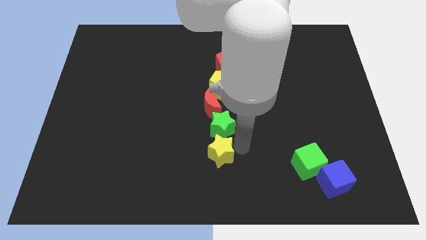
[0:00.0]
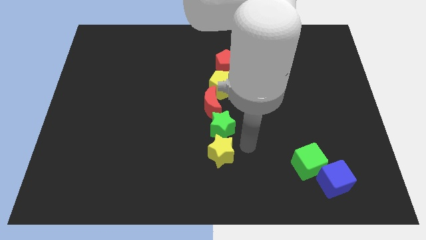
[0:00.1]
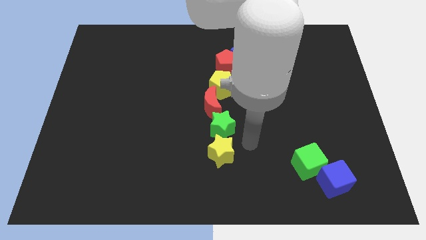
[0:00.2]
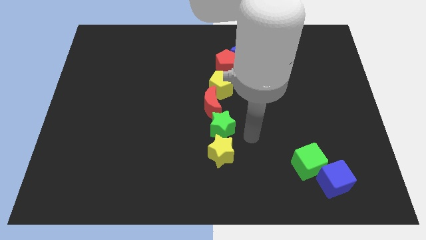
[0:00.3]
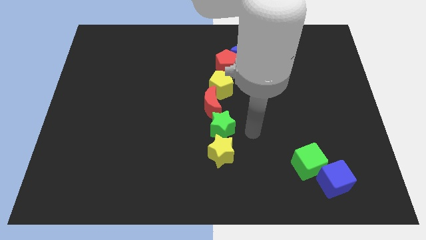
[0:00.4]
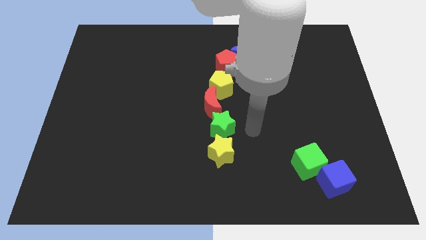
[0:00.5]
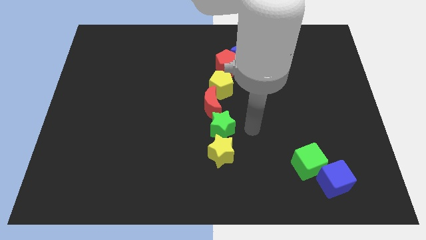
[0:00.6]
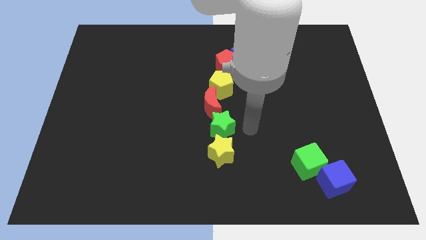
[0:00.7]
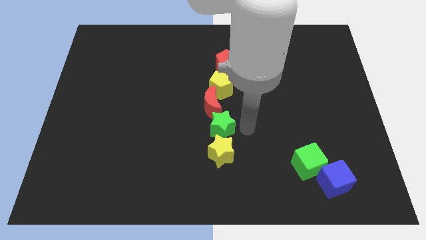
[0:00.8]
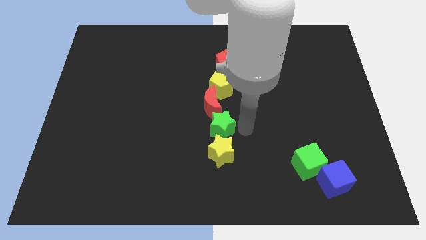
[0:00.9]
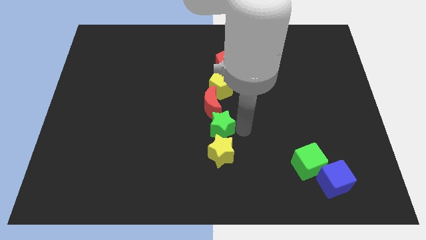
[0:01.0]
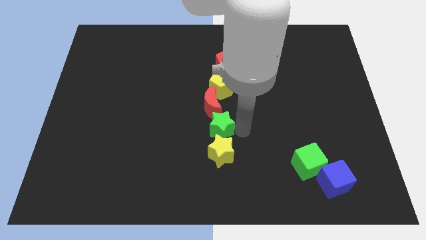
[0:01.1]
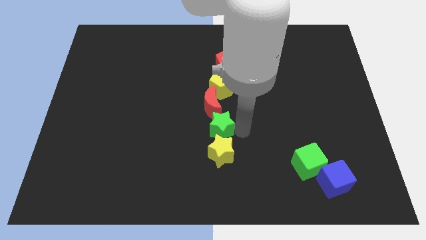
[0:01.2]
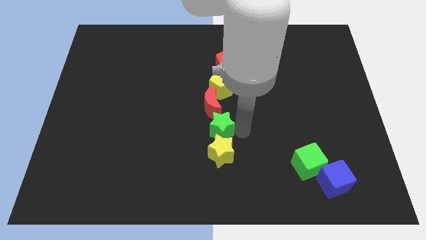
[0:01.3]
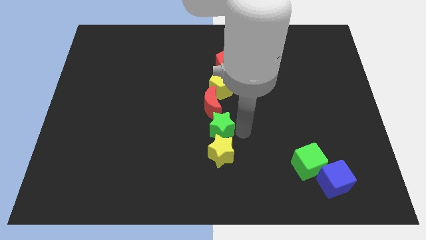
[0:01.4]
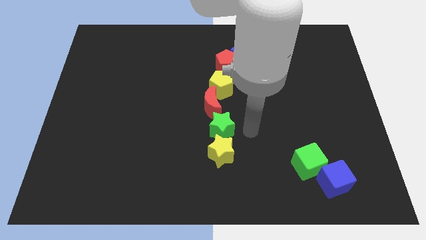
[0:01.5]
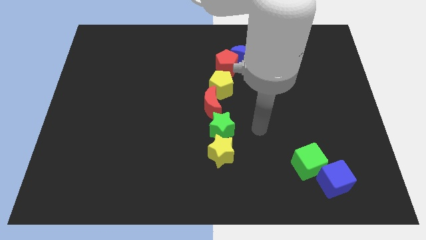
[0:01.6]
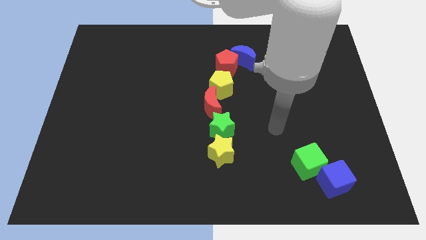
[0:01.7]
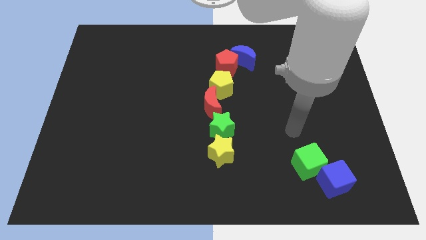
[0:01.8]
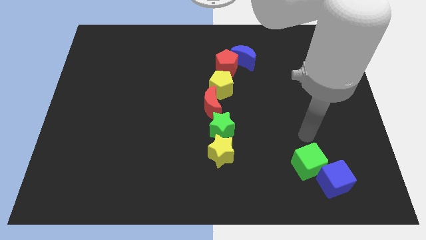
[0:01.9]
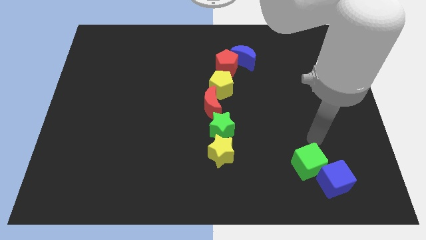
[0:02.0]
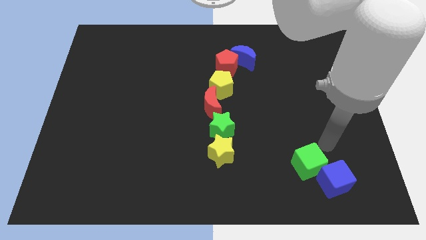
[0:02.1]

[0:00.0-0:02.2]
adjust the green star at the top of yellow star

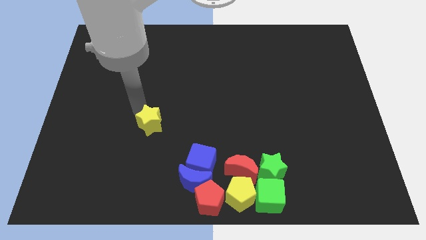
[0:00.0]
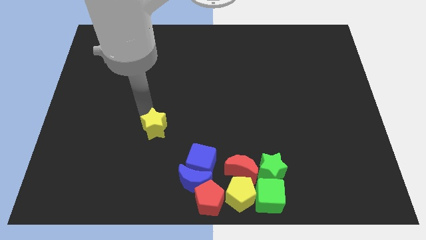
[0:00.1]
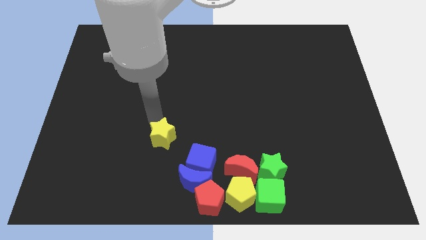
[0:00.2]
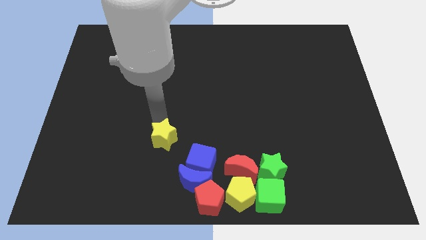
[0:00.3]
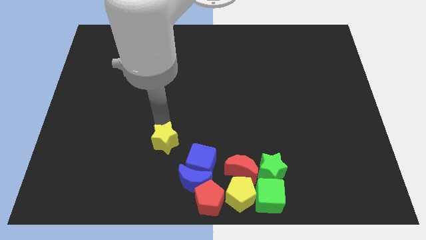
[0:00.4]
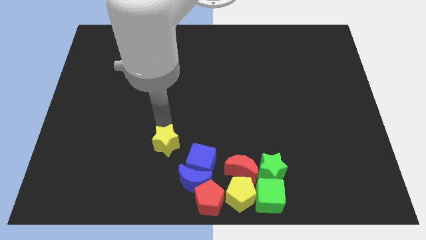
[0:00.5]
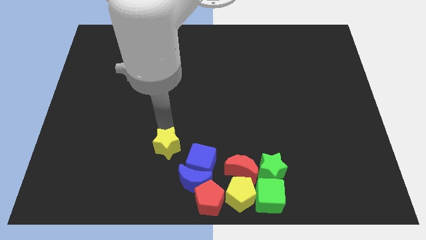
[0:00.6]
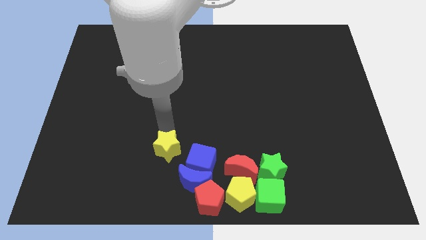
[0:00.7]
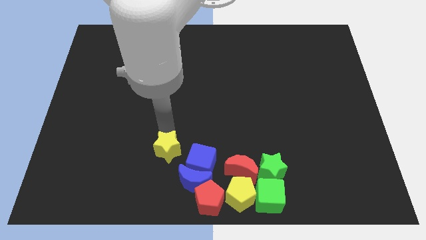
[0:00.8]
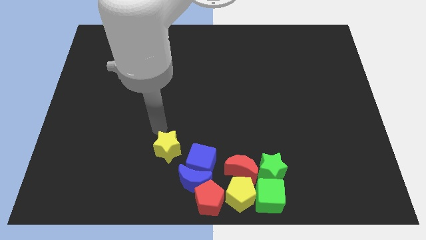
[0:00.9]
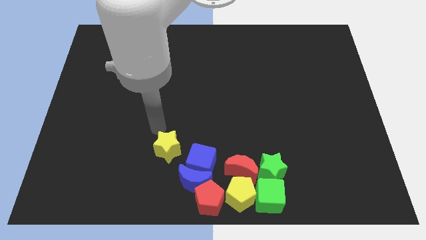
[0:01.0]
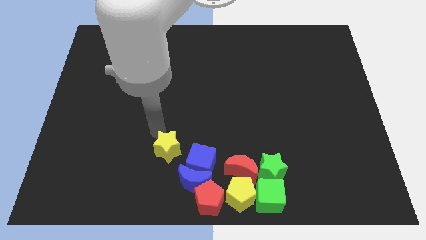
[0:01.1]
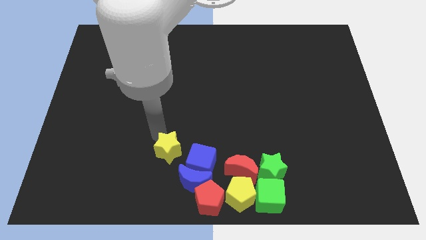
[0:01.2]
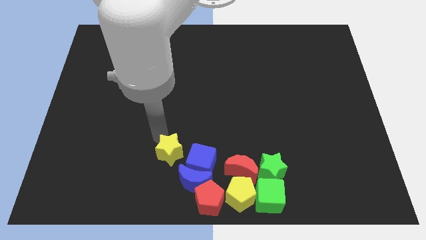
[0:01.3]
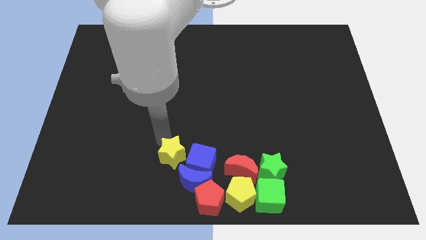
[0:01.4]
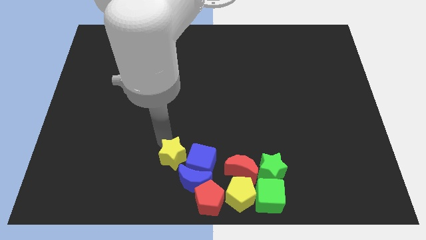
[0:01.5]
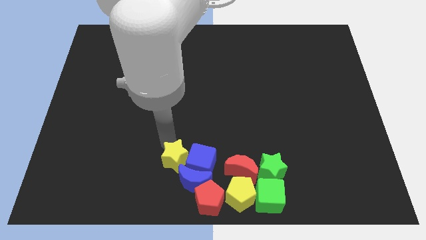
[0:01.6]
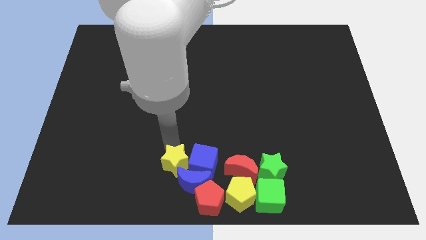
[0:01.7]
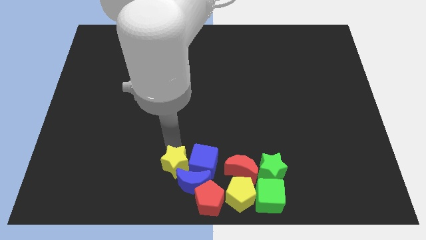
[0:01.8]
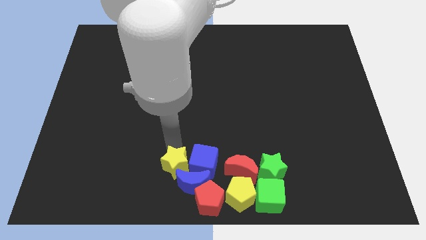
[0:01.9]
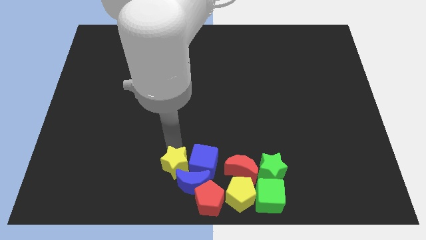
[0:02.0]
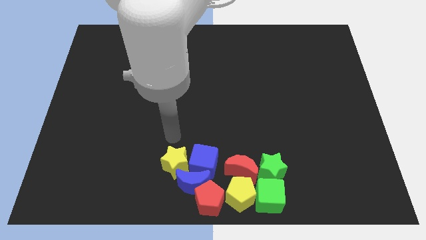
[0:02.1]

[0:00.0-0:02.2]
place the yellow star into the blue blocks

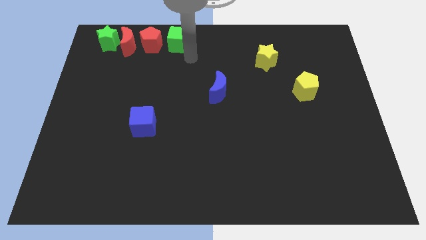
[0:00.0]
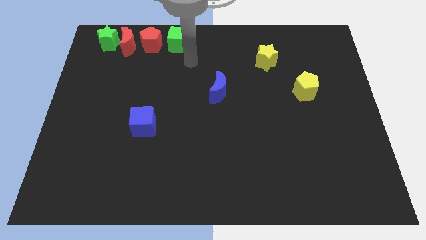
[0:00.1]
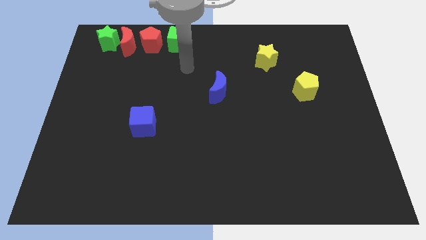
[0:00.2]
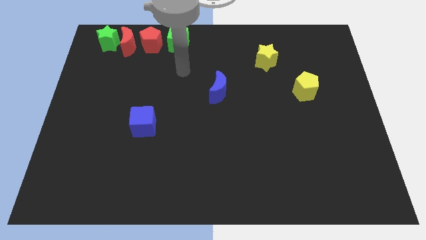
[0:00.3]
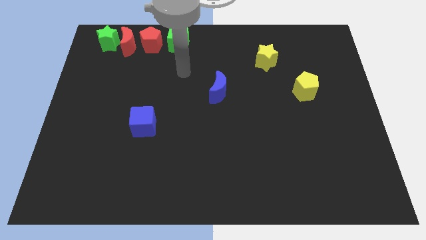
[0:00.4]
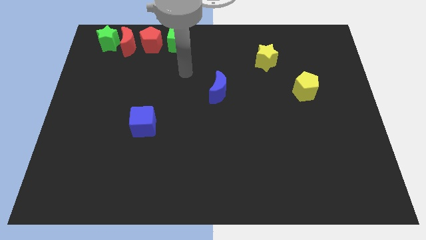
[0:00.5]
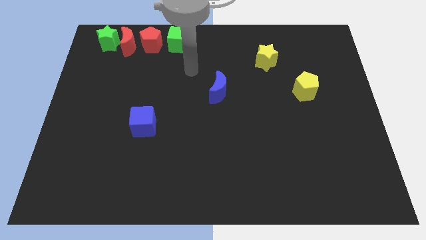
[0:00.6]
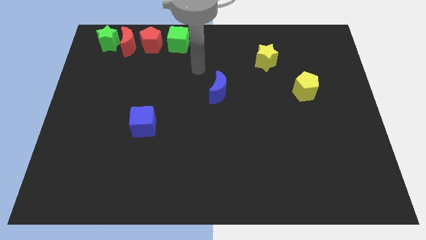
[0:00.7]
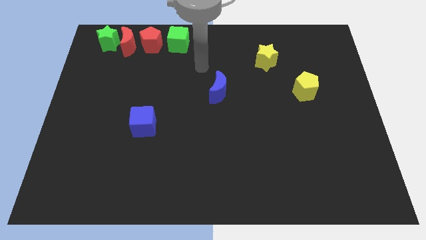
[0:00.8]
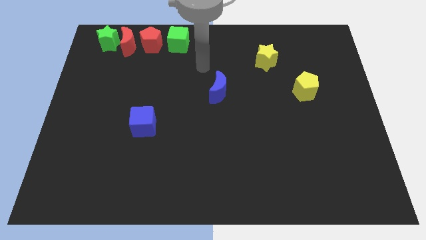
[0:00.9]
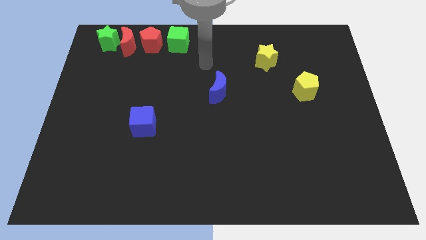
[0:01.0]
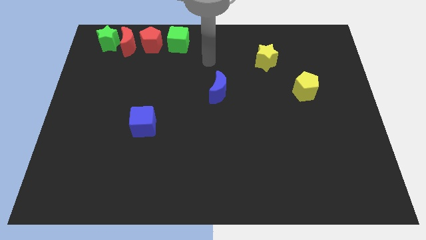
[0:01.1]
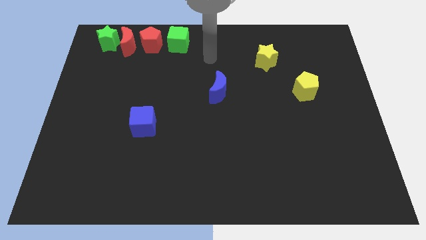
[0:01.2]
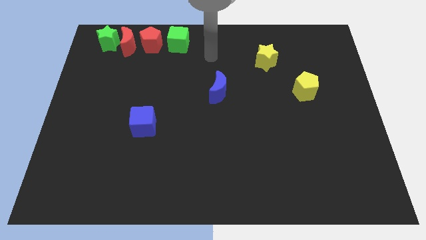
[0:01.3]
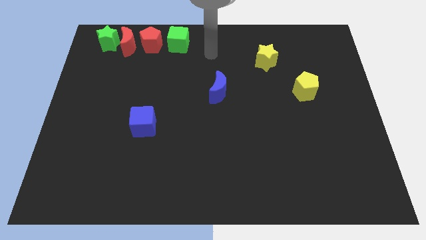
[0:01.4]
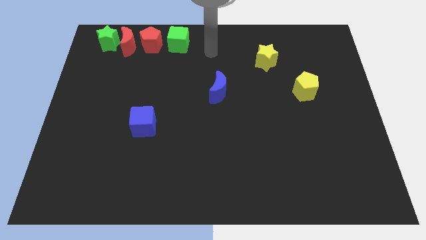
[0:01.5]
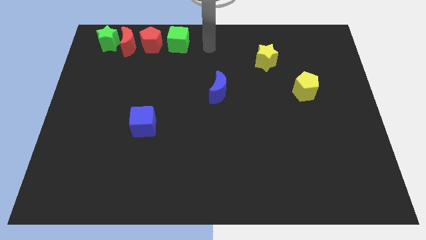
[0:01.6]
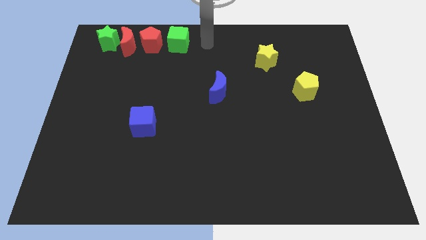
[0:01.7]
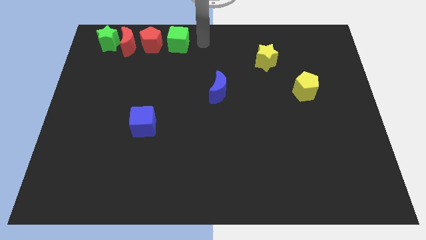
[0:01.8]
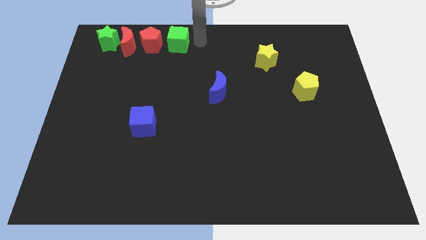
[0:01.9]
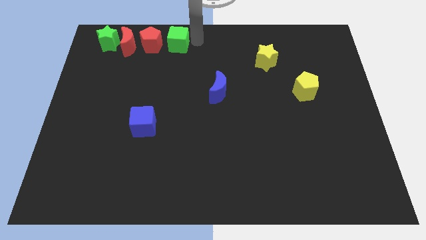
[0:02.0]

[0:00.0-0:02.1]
move your arm to the right side of the green cube

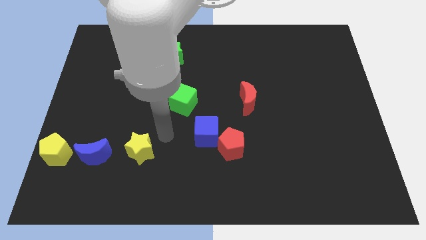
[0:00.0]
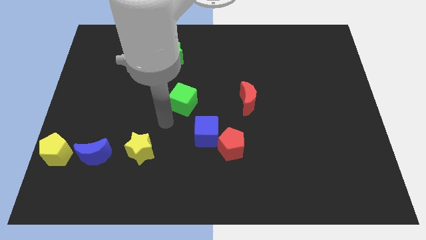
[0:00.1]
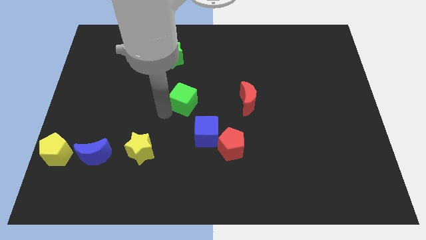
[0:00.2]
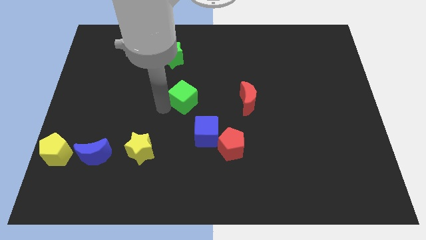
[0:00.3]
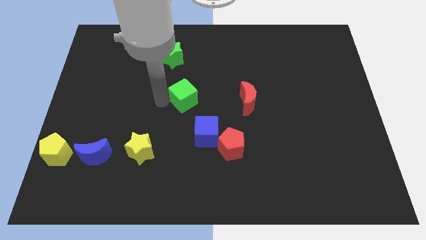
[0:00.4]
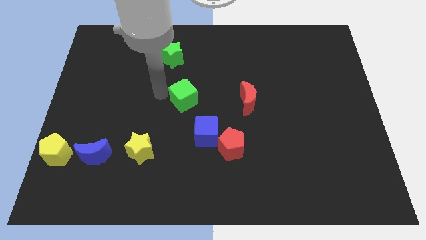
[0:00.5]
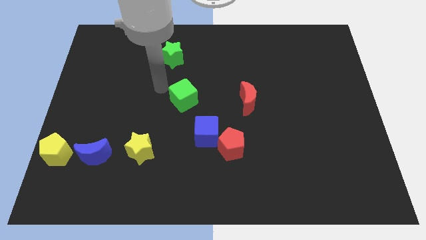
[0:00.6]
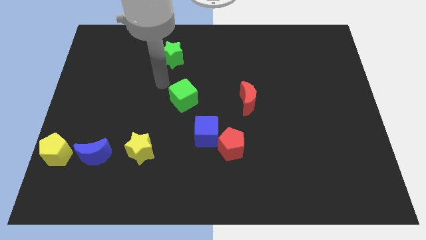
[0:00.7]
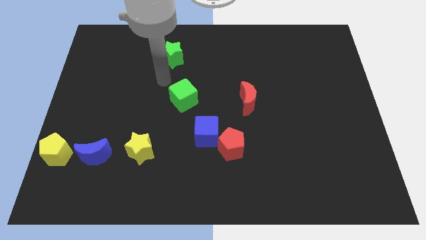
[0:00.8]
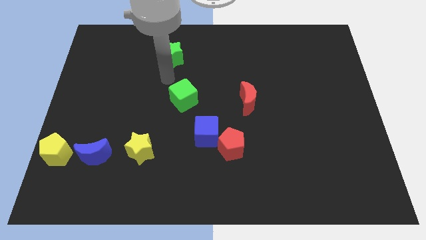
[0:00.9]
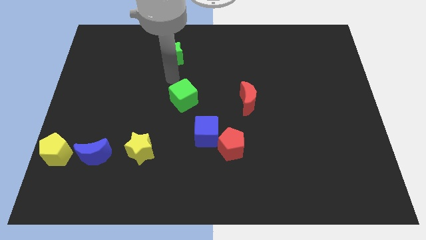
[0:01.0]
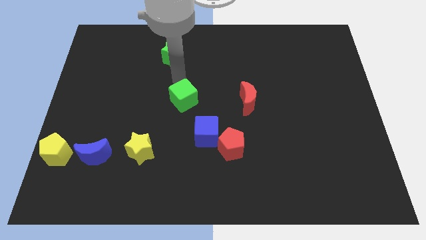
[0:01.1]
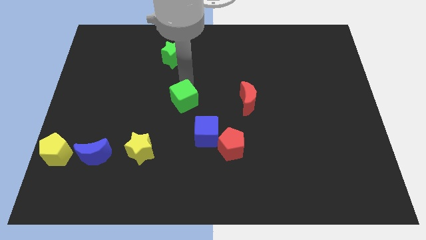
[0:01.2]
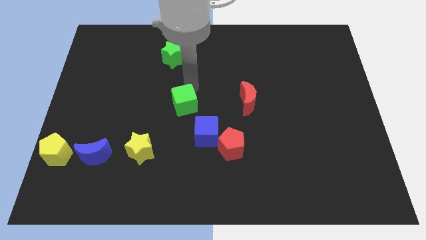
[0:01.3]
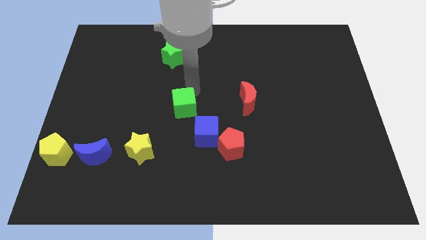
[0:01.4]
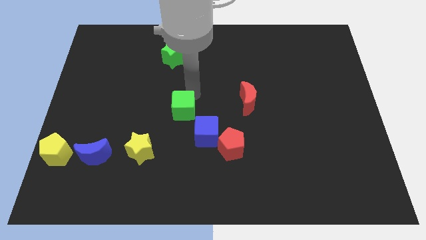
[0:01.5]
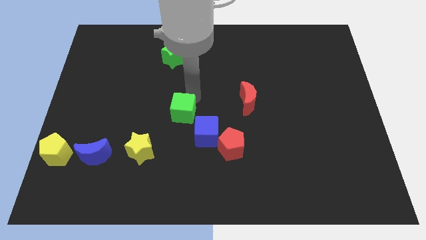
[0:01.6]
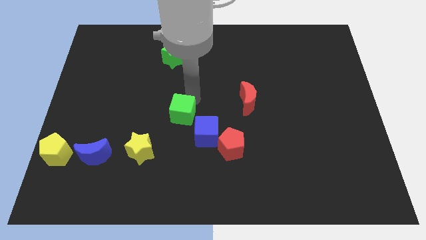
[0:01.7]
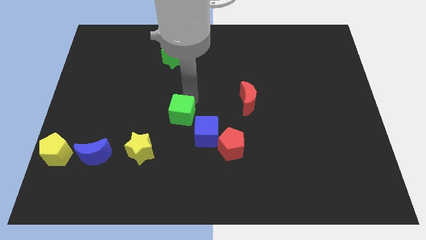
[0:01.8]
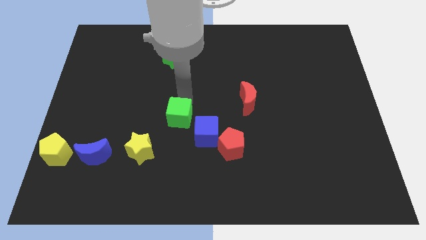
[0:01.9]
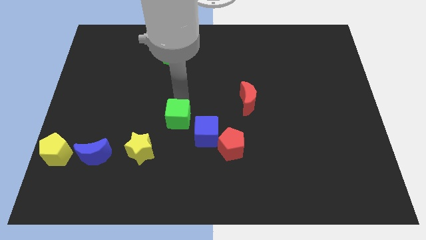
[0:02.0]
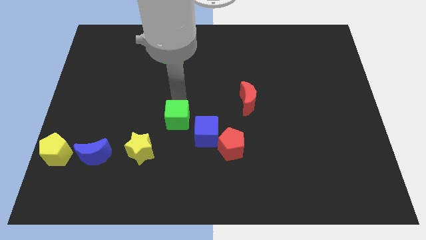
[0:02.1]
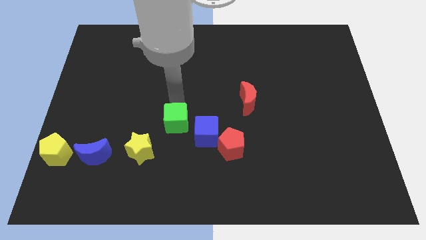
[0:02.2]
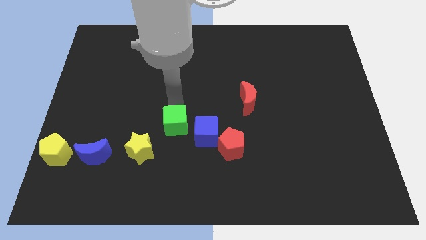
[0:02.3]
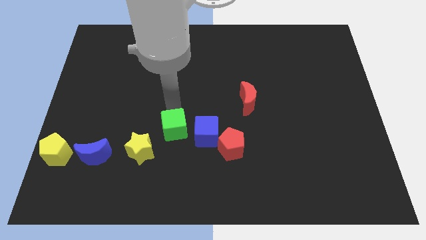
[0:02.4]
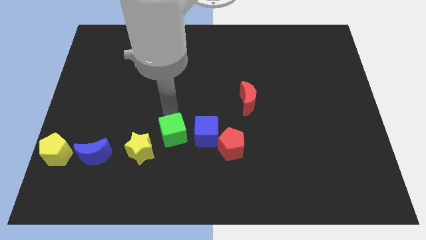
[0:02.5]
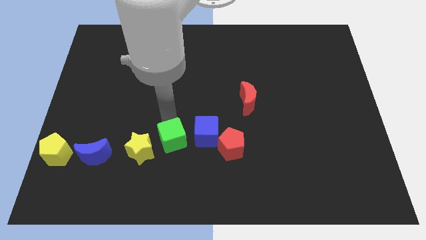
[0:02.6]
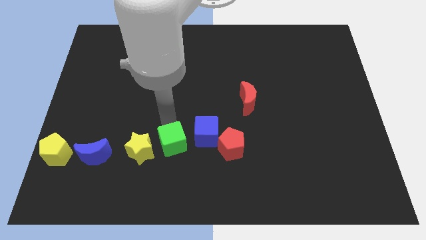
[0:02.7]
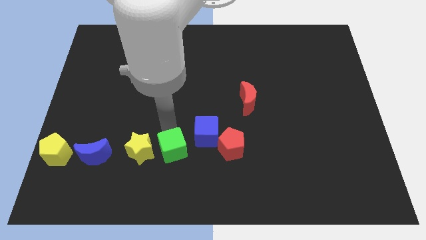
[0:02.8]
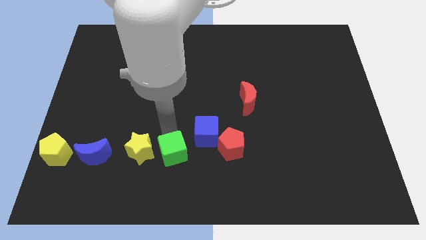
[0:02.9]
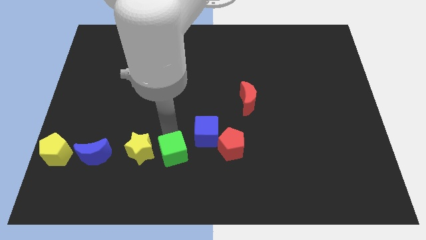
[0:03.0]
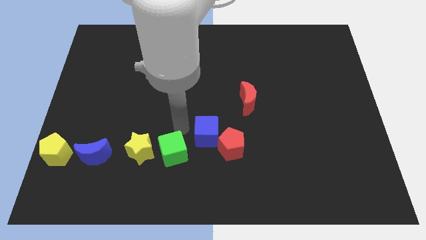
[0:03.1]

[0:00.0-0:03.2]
move the green cube to the right of the yellow star
